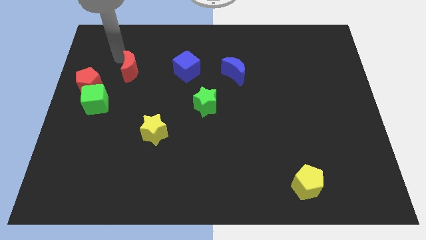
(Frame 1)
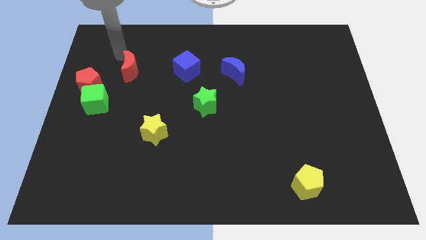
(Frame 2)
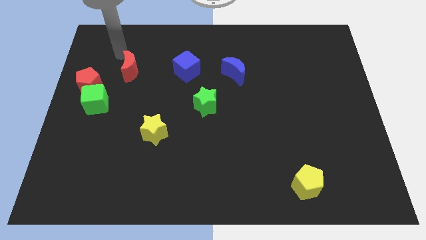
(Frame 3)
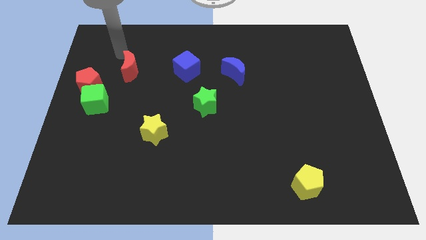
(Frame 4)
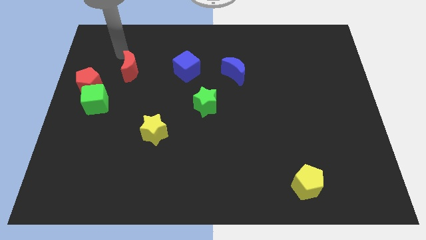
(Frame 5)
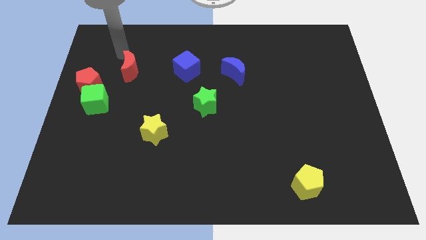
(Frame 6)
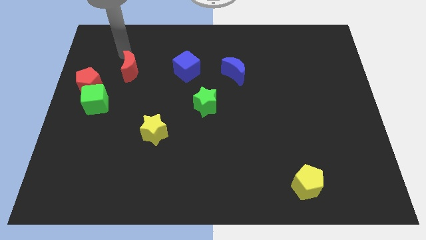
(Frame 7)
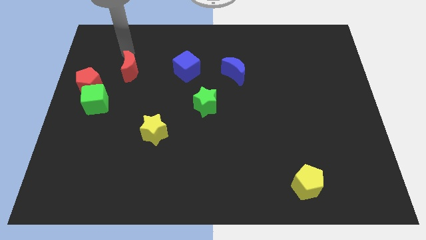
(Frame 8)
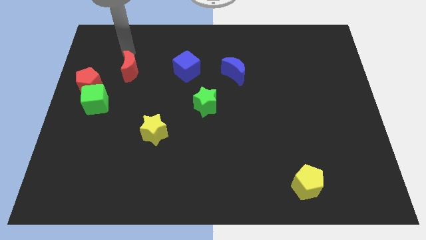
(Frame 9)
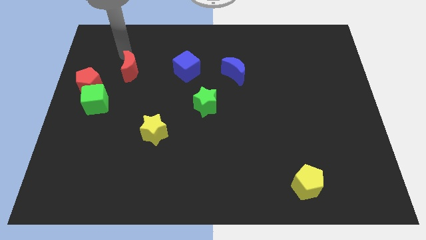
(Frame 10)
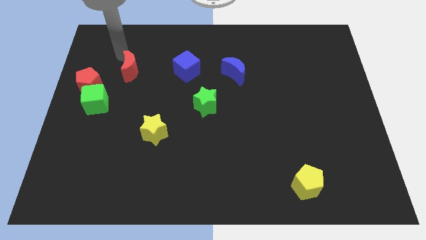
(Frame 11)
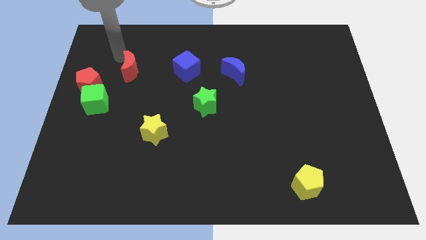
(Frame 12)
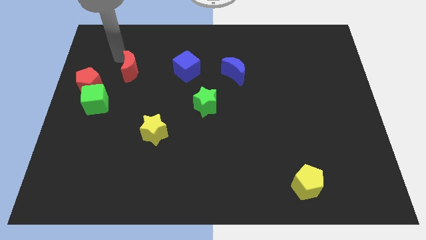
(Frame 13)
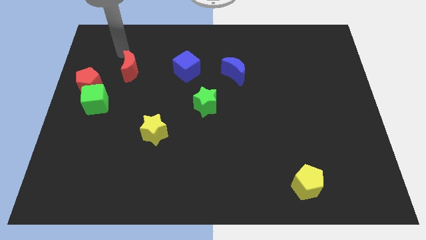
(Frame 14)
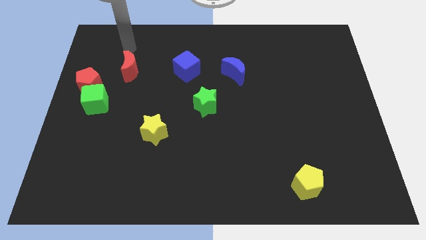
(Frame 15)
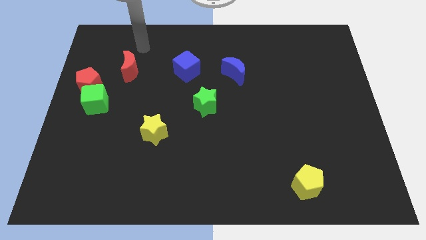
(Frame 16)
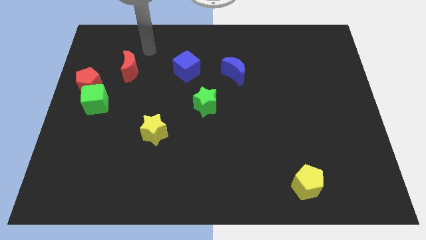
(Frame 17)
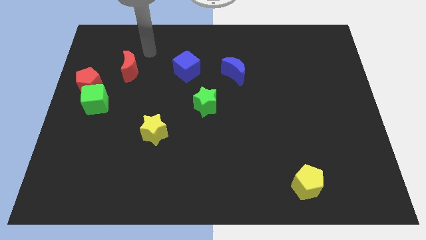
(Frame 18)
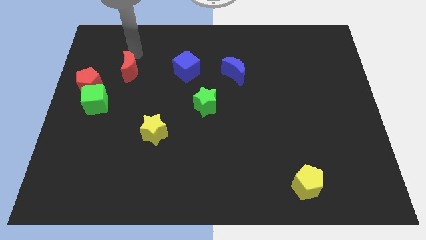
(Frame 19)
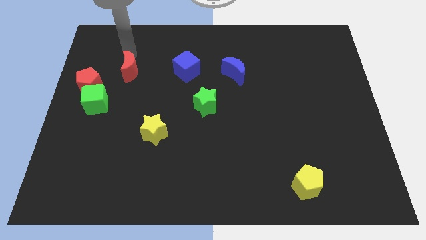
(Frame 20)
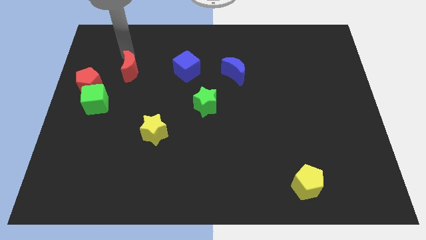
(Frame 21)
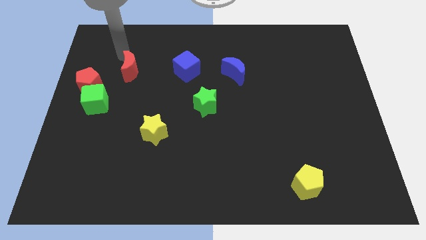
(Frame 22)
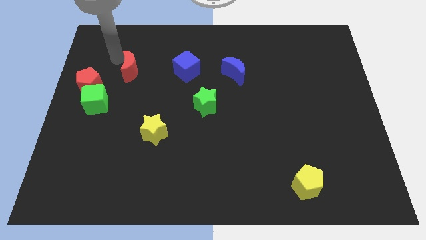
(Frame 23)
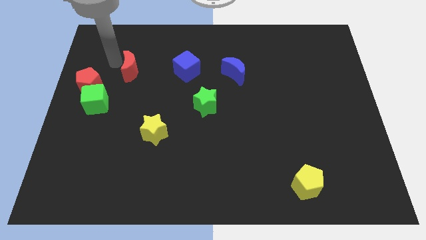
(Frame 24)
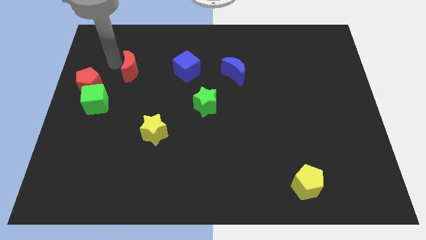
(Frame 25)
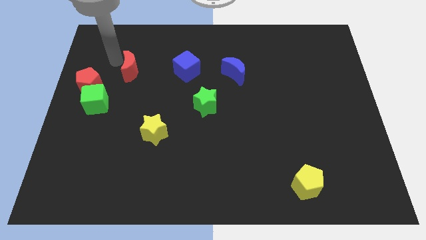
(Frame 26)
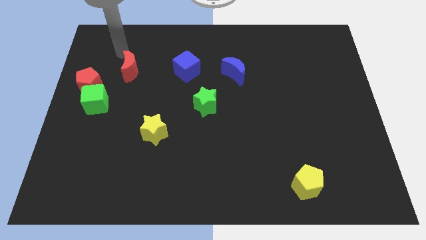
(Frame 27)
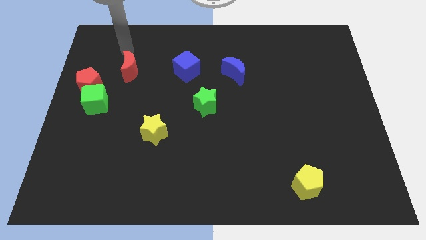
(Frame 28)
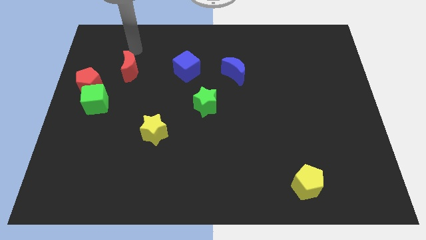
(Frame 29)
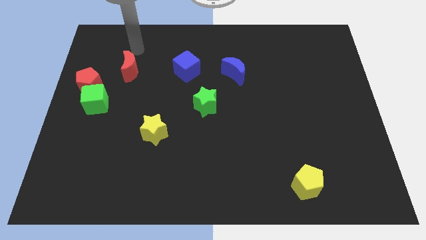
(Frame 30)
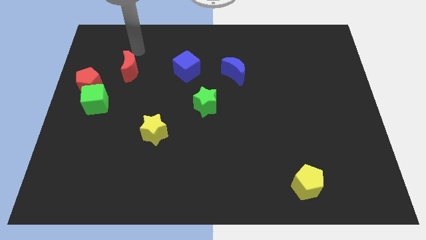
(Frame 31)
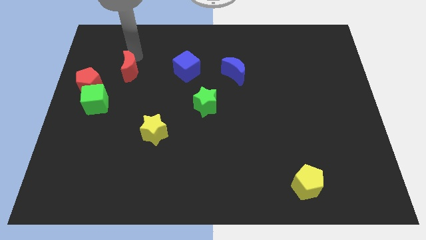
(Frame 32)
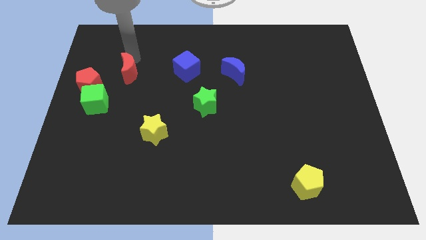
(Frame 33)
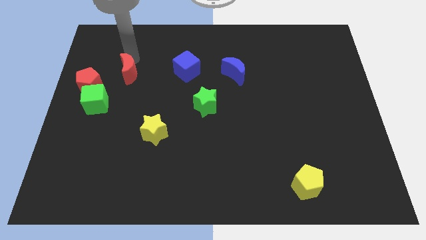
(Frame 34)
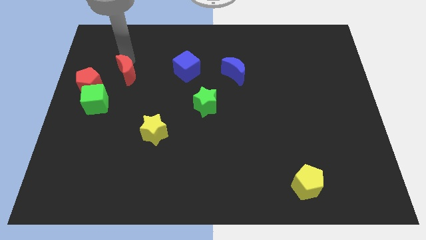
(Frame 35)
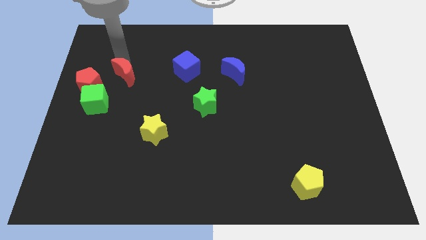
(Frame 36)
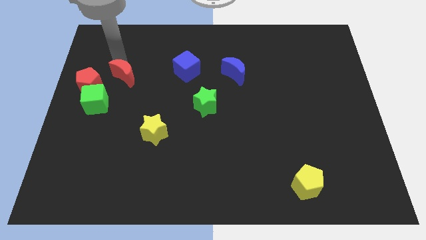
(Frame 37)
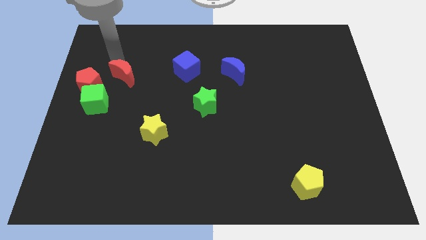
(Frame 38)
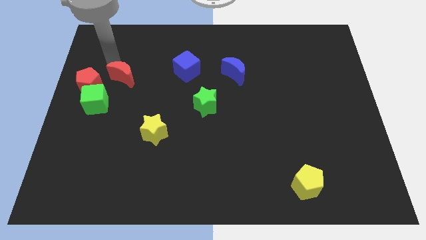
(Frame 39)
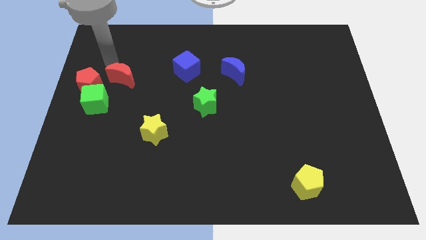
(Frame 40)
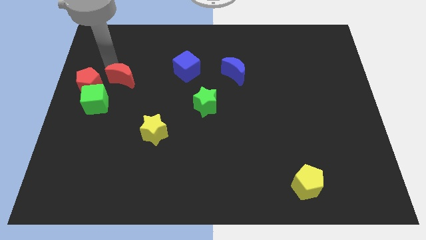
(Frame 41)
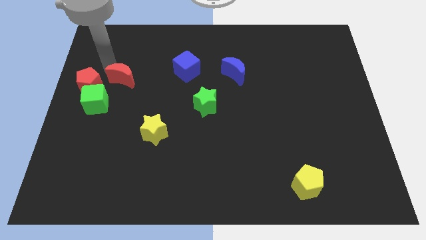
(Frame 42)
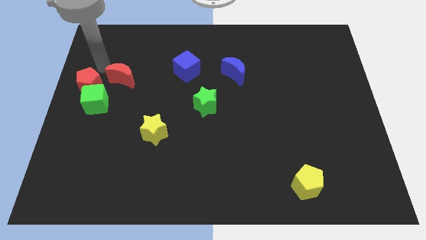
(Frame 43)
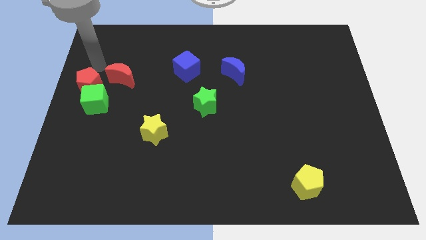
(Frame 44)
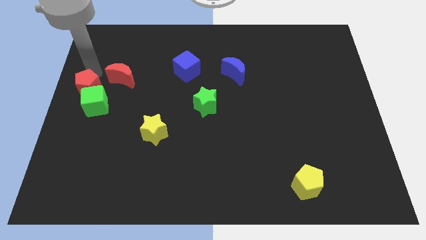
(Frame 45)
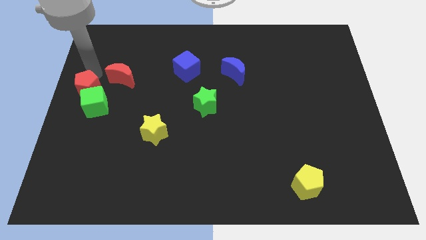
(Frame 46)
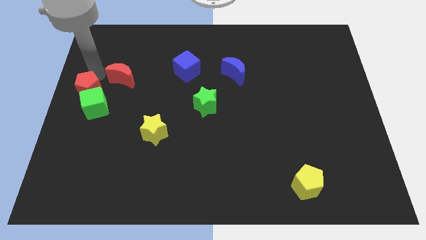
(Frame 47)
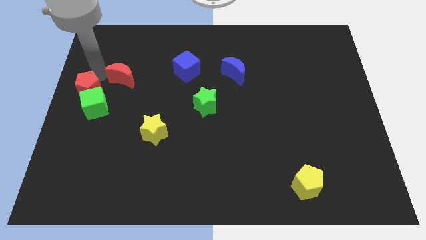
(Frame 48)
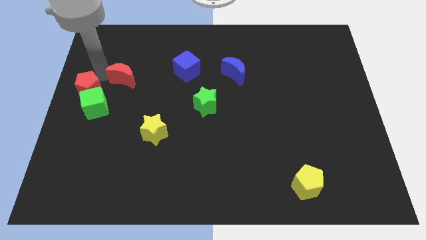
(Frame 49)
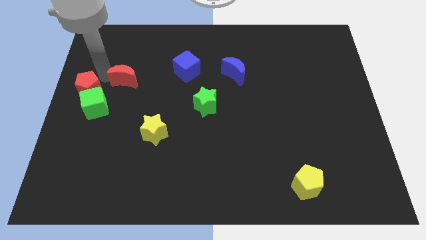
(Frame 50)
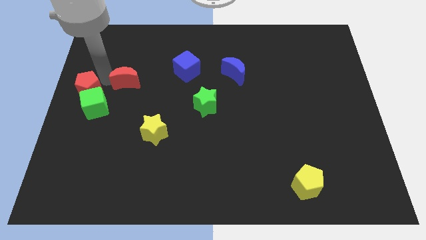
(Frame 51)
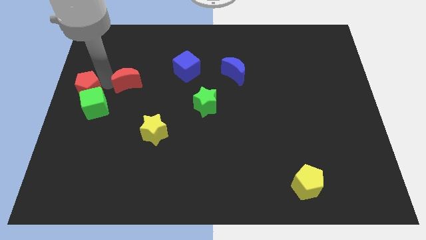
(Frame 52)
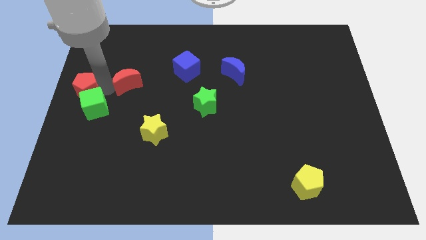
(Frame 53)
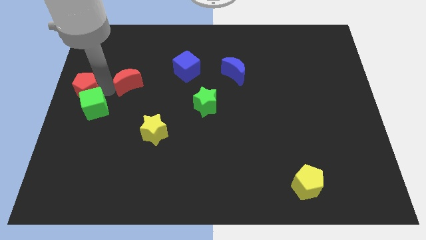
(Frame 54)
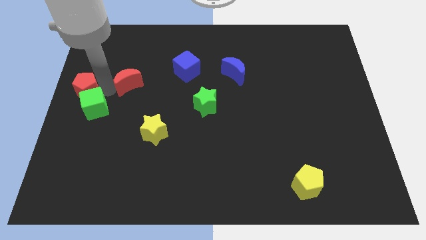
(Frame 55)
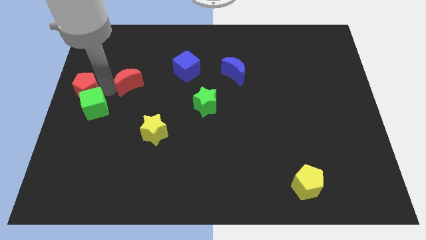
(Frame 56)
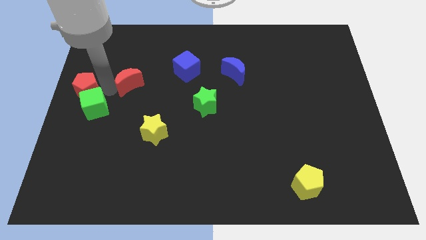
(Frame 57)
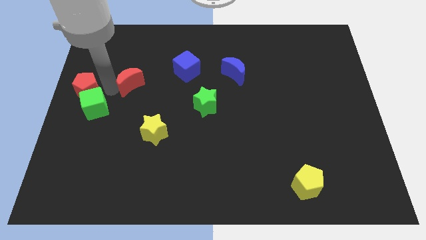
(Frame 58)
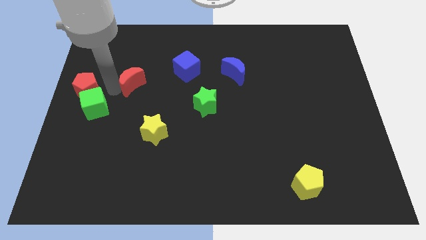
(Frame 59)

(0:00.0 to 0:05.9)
place the red crescent in between the red pentagon and the blue cube

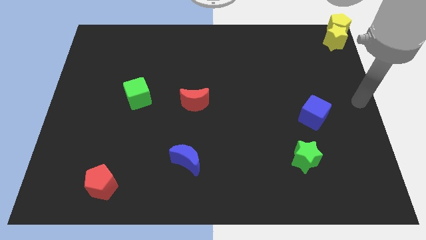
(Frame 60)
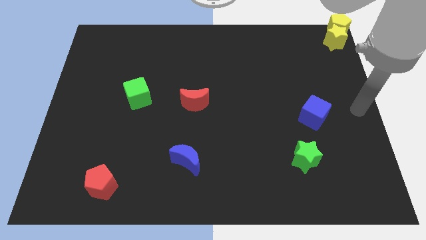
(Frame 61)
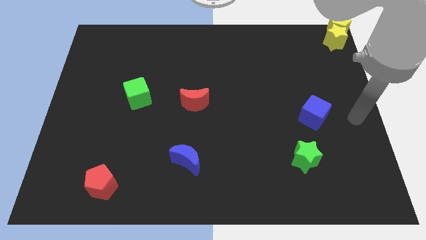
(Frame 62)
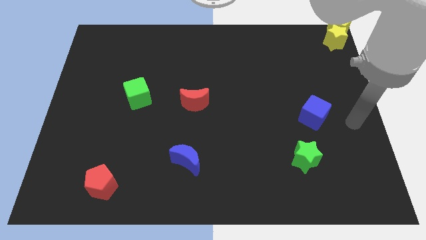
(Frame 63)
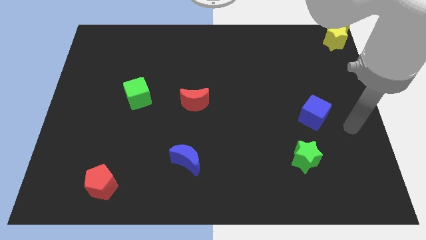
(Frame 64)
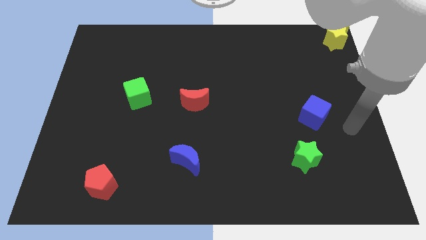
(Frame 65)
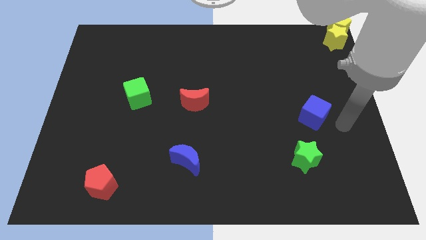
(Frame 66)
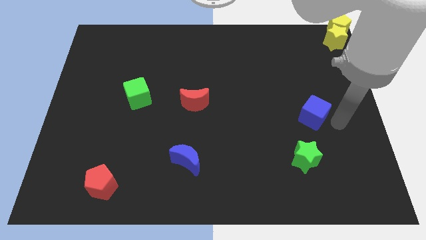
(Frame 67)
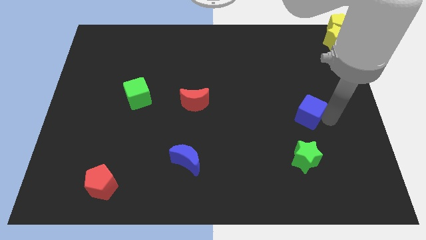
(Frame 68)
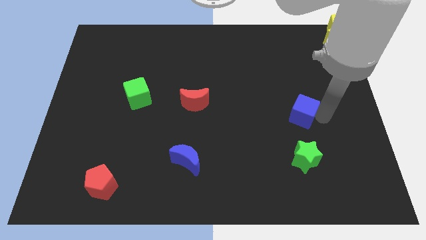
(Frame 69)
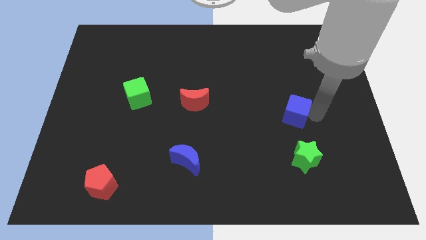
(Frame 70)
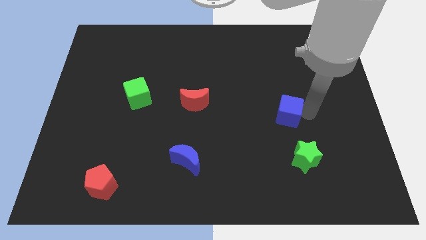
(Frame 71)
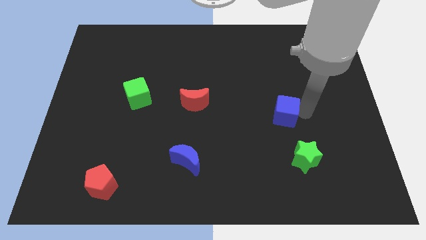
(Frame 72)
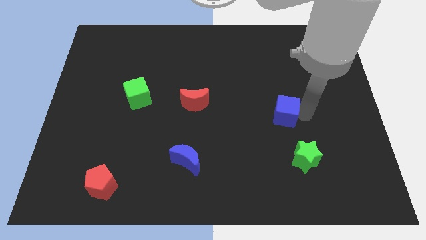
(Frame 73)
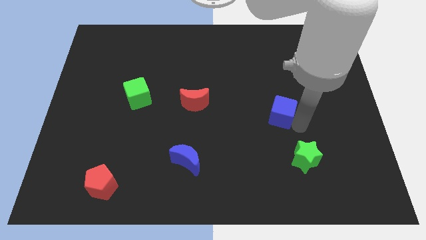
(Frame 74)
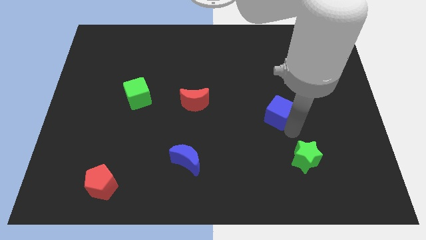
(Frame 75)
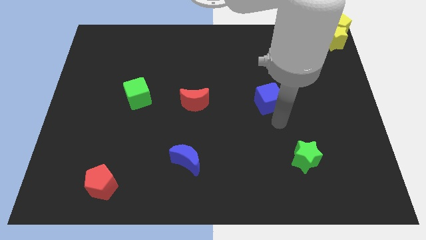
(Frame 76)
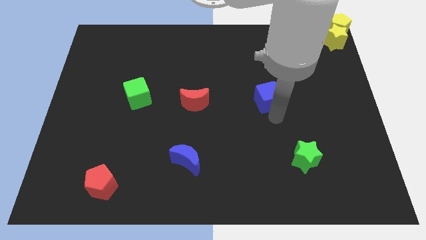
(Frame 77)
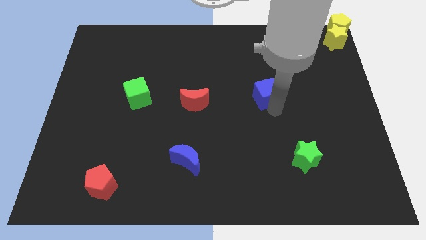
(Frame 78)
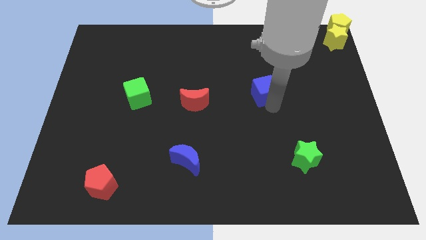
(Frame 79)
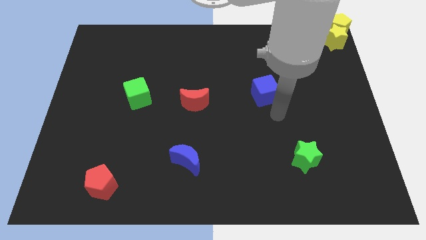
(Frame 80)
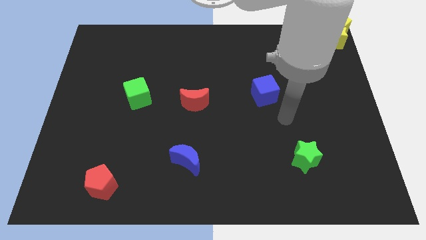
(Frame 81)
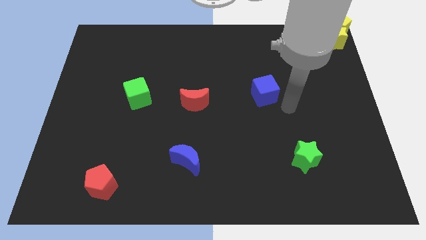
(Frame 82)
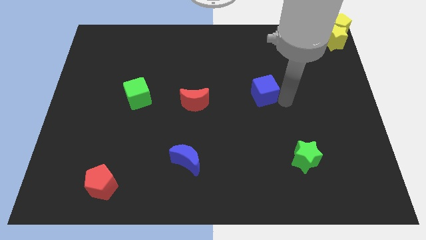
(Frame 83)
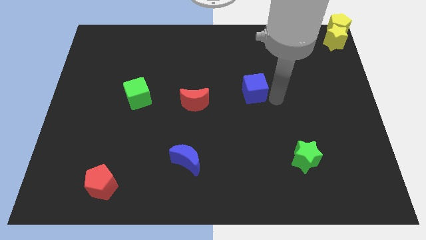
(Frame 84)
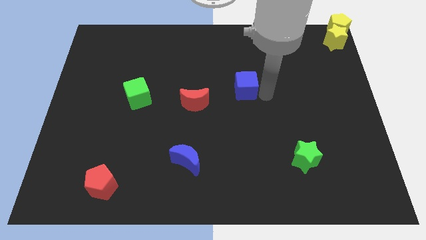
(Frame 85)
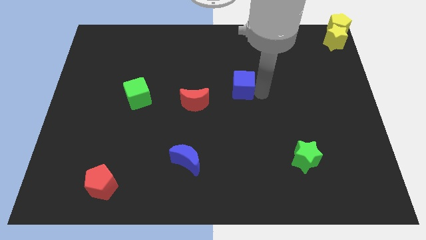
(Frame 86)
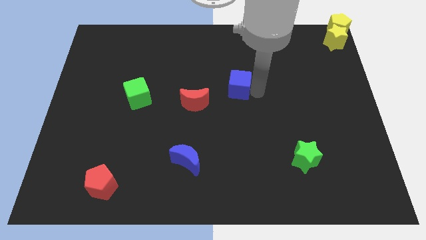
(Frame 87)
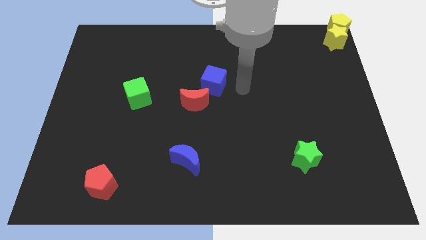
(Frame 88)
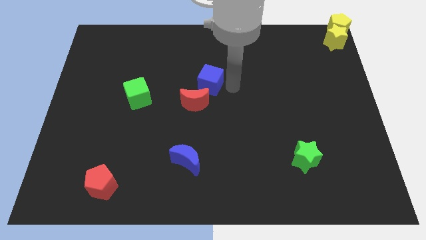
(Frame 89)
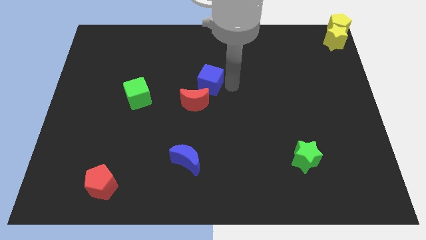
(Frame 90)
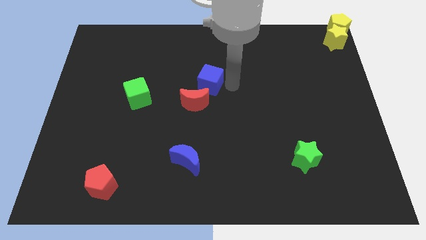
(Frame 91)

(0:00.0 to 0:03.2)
place blue block to the top right of the red crescent
